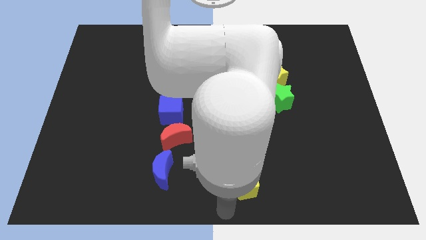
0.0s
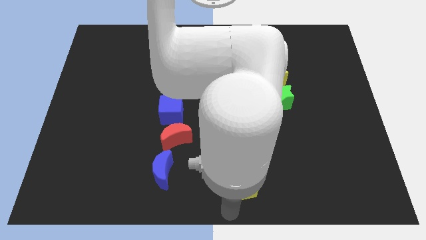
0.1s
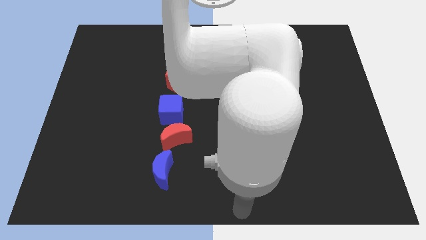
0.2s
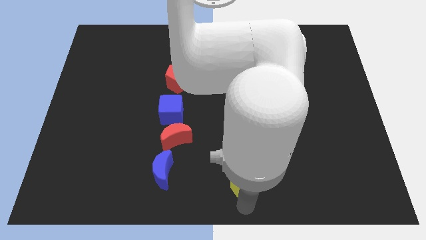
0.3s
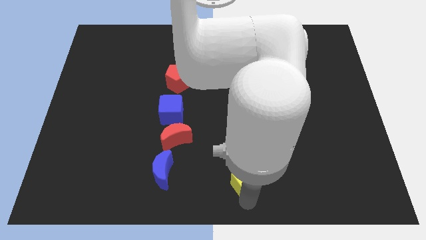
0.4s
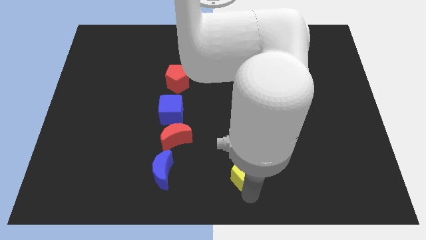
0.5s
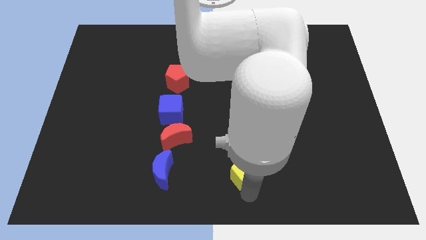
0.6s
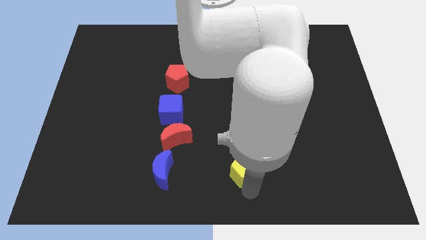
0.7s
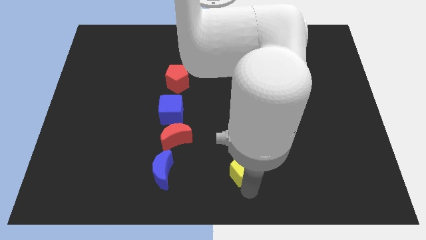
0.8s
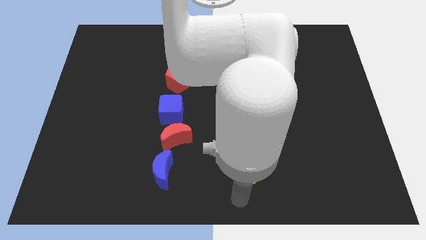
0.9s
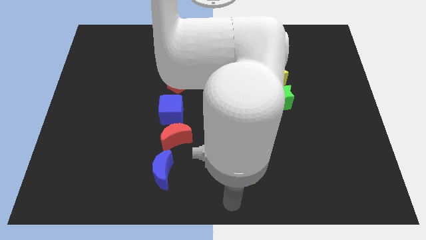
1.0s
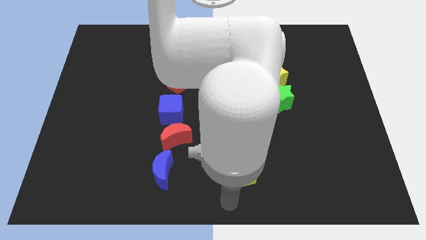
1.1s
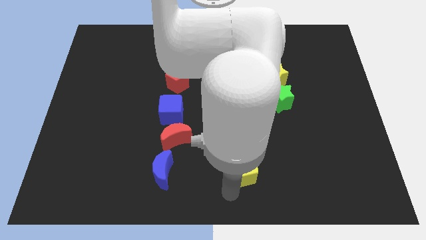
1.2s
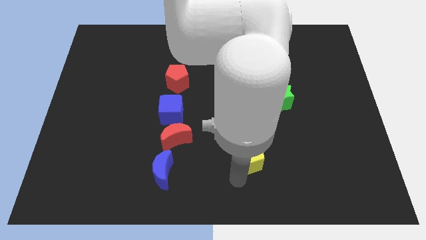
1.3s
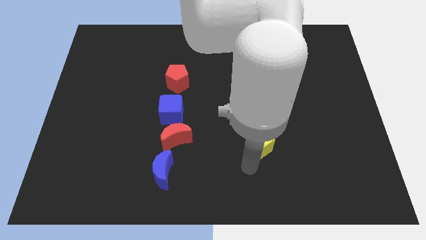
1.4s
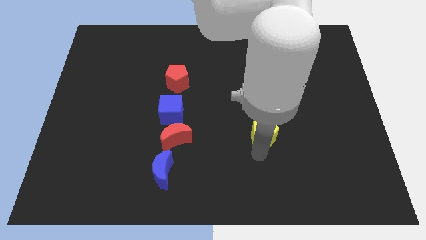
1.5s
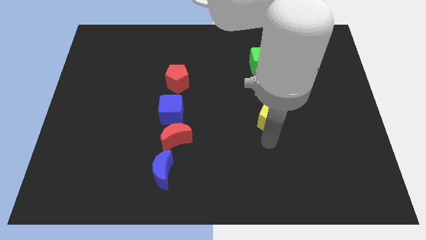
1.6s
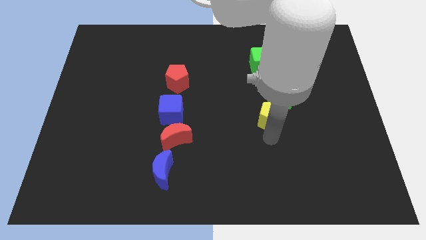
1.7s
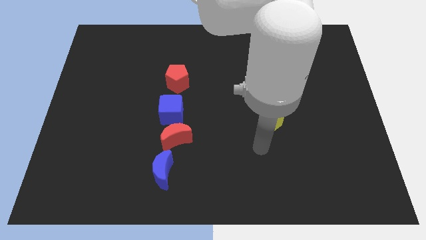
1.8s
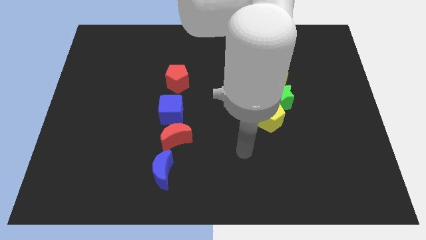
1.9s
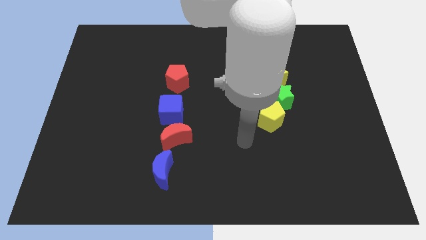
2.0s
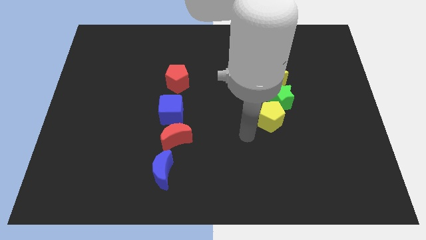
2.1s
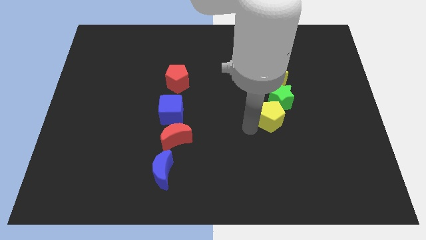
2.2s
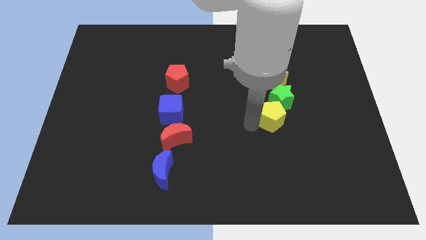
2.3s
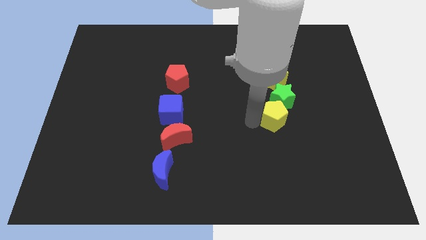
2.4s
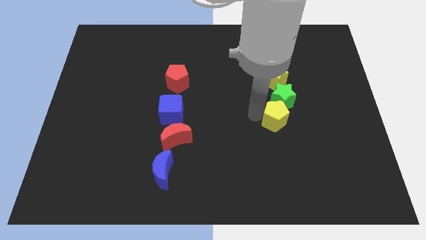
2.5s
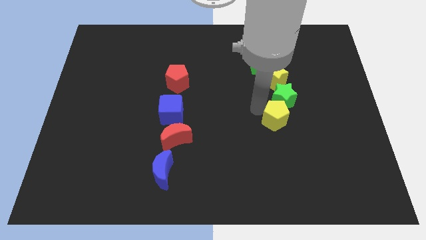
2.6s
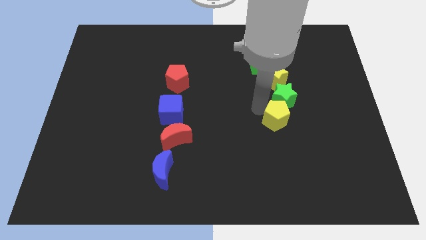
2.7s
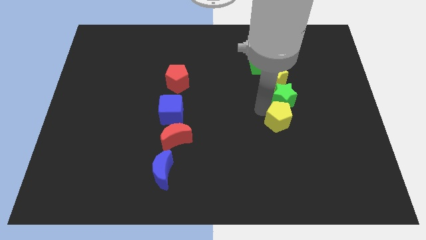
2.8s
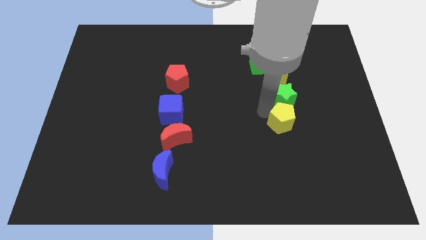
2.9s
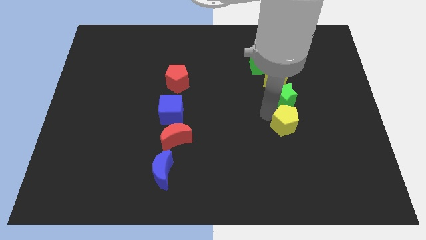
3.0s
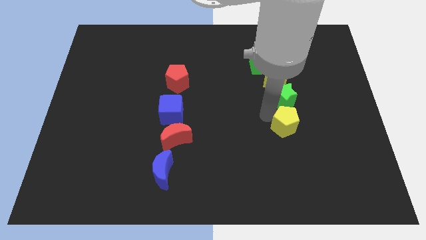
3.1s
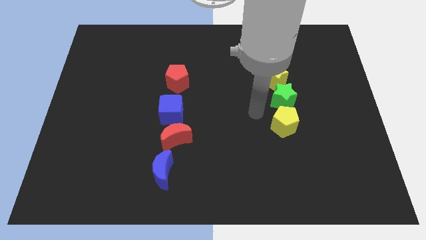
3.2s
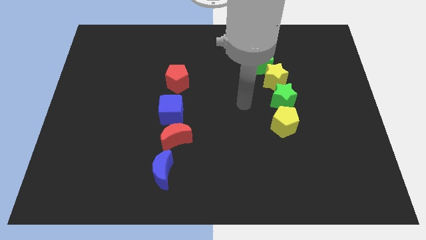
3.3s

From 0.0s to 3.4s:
push the yellow pentagon to the bottom side of green star

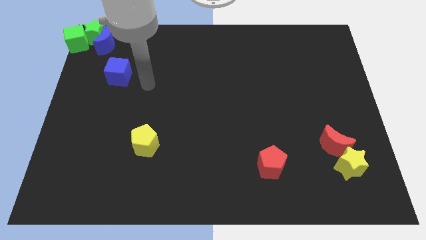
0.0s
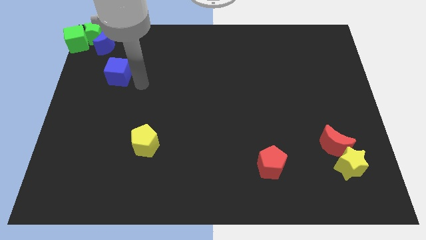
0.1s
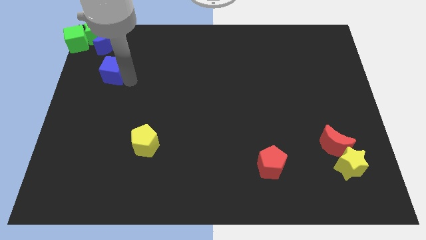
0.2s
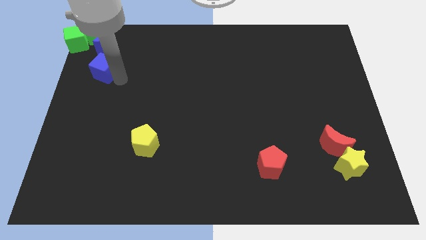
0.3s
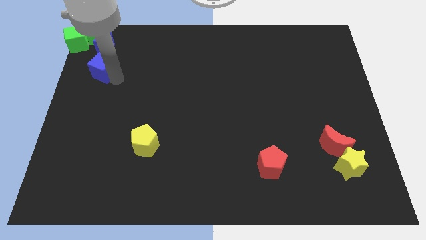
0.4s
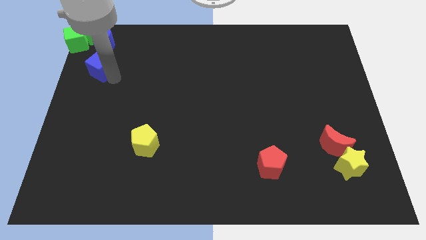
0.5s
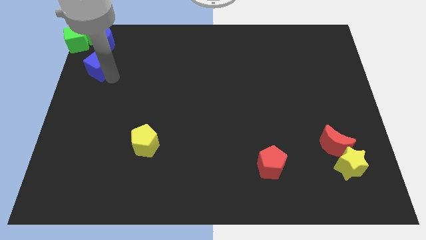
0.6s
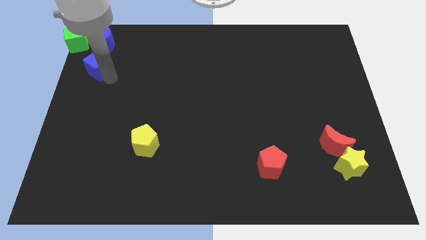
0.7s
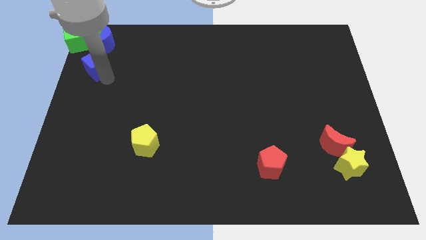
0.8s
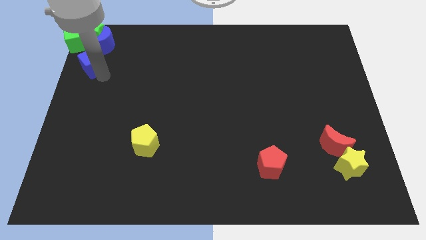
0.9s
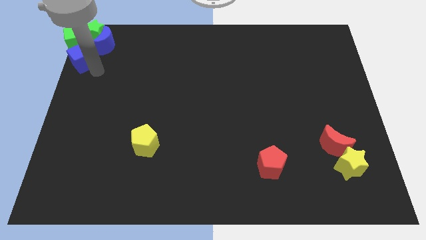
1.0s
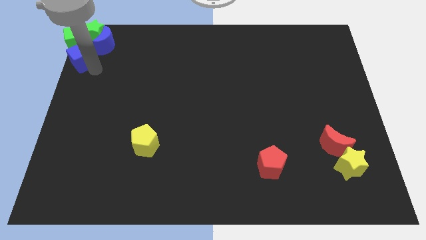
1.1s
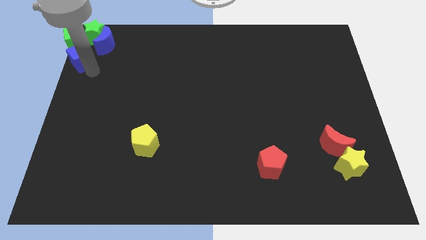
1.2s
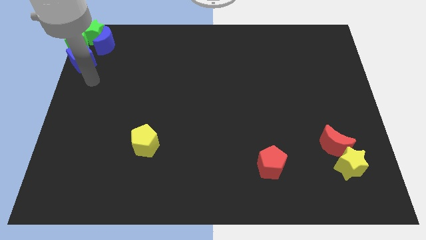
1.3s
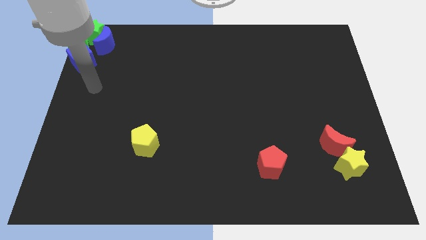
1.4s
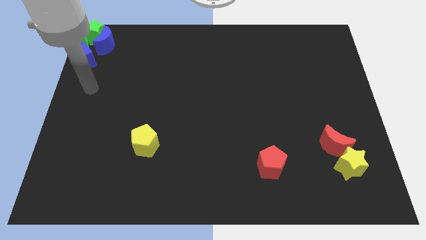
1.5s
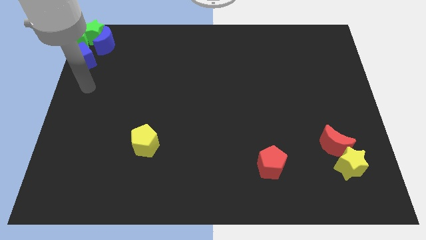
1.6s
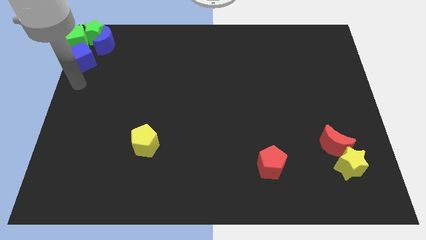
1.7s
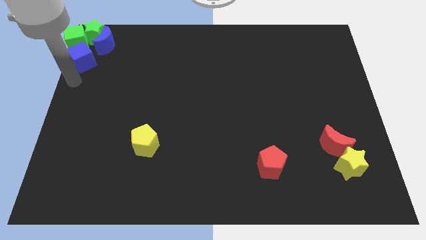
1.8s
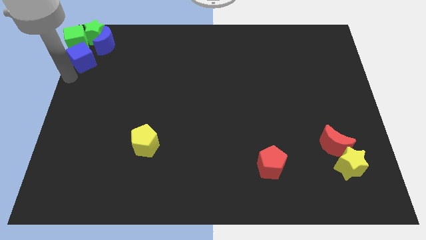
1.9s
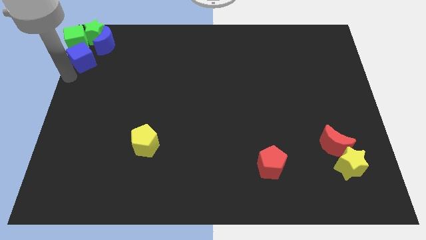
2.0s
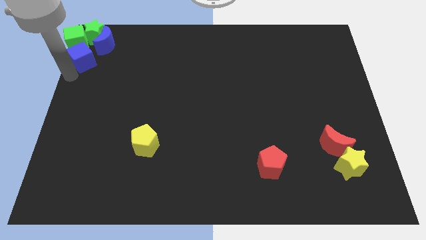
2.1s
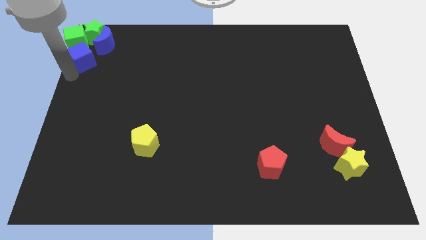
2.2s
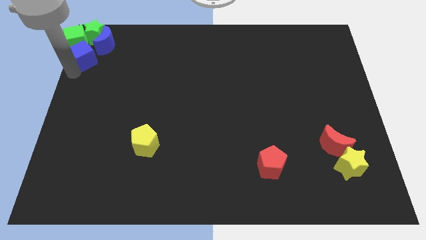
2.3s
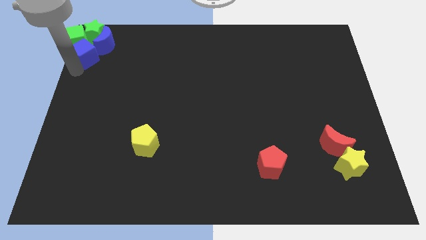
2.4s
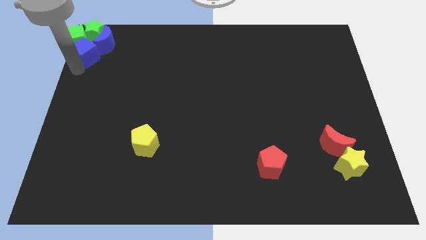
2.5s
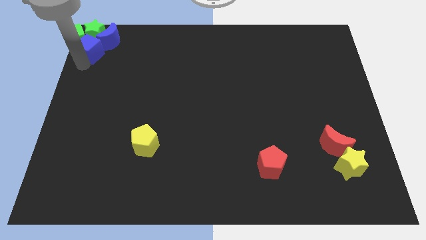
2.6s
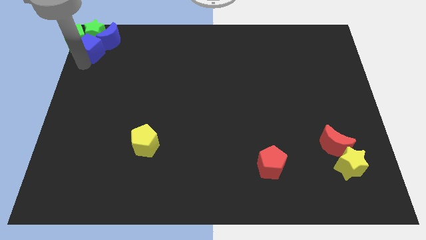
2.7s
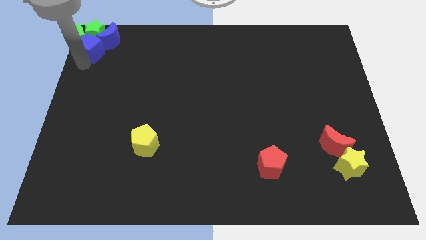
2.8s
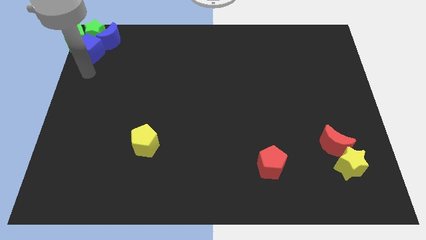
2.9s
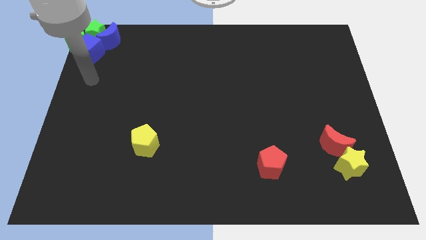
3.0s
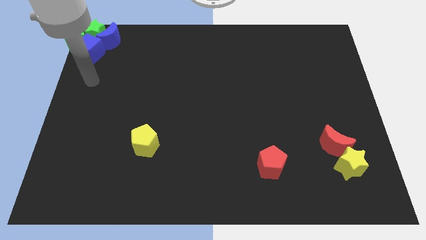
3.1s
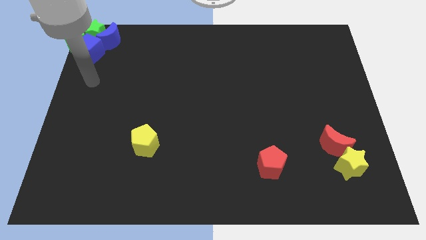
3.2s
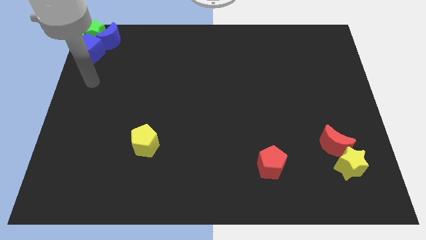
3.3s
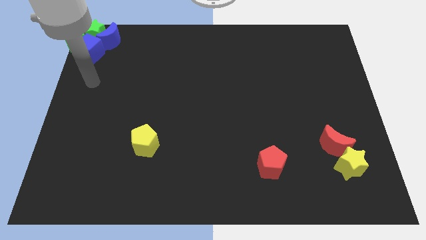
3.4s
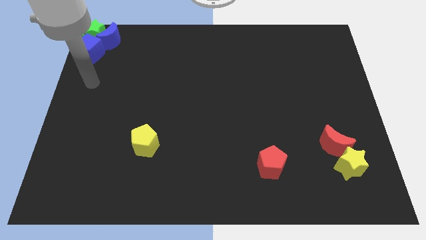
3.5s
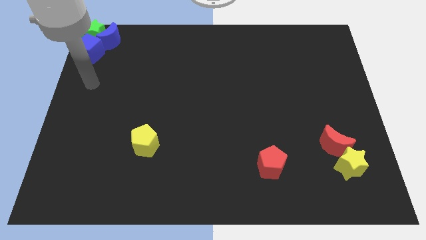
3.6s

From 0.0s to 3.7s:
move the blue cube into the green cube

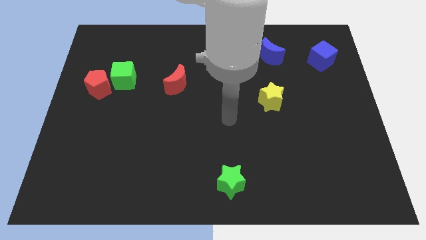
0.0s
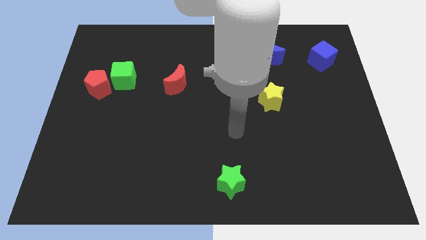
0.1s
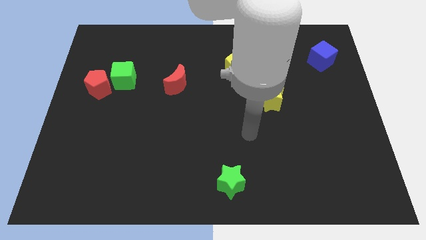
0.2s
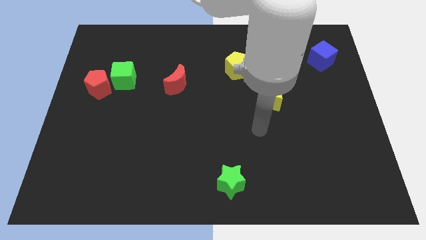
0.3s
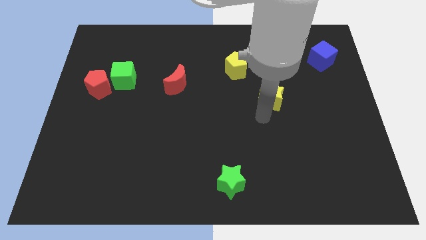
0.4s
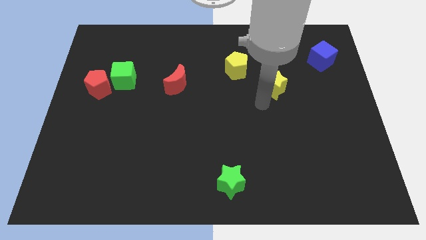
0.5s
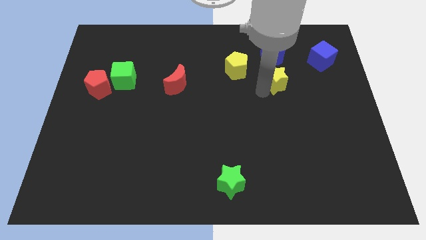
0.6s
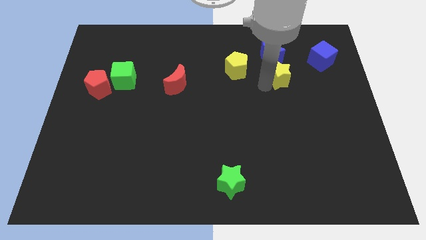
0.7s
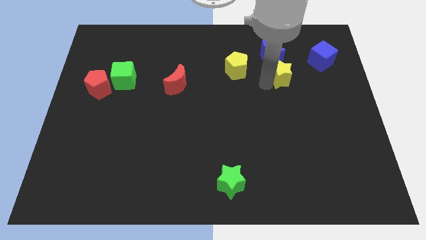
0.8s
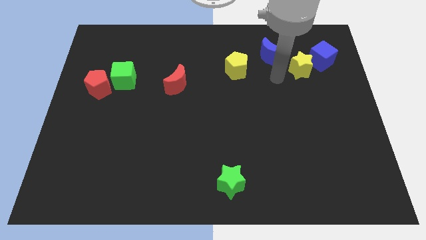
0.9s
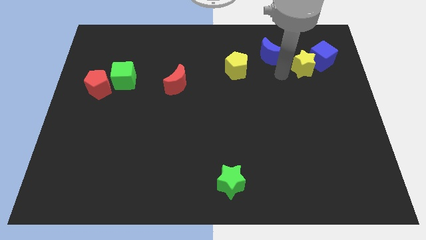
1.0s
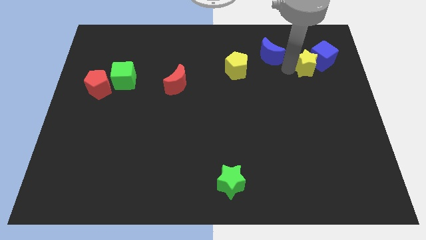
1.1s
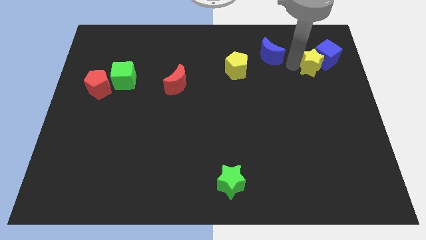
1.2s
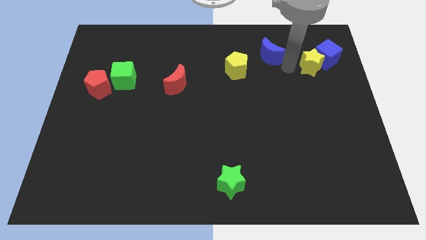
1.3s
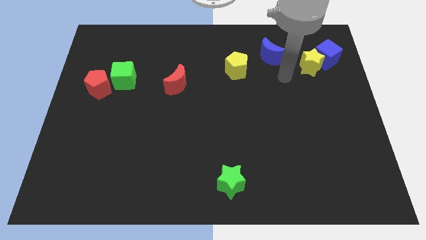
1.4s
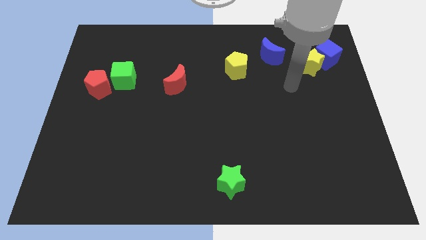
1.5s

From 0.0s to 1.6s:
push the yellow star into the blue cube

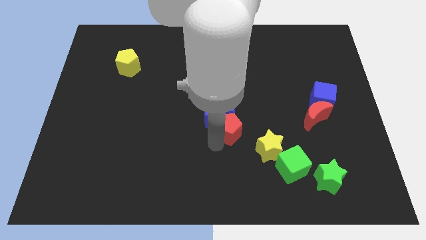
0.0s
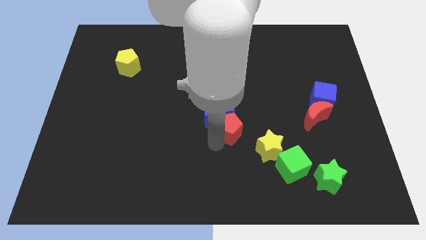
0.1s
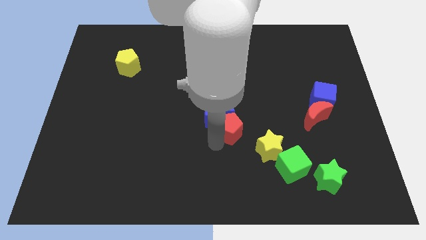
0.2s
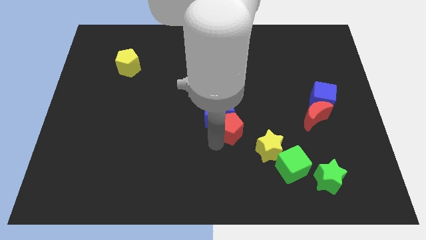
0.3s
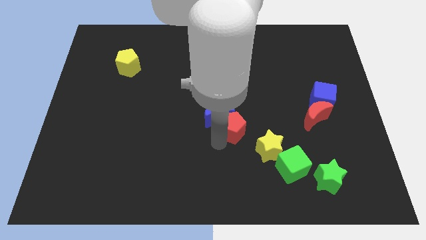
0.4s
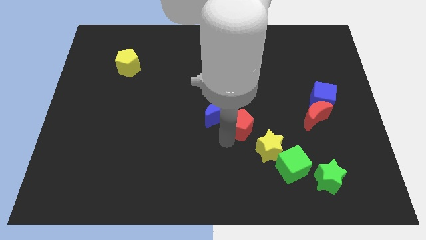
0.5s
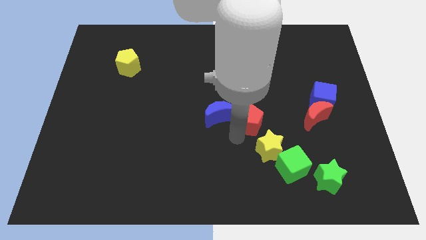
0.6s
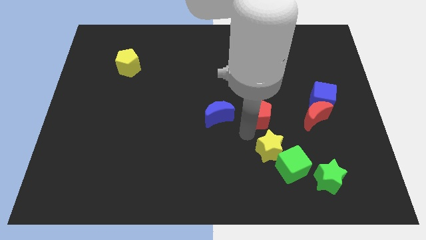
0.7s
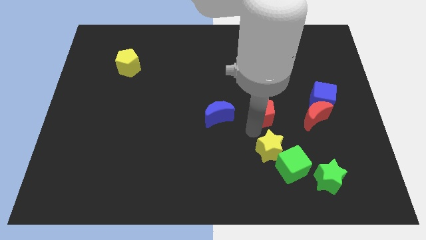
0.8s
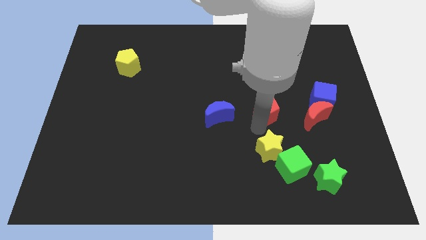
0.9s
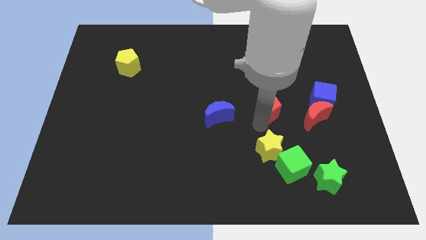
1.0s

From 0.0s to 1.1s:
separate red pentagon from blue crescent
